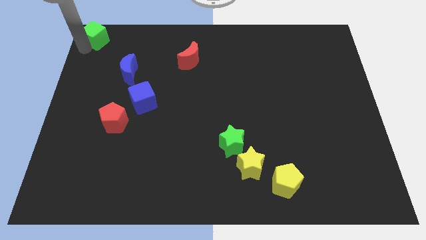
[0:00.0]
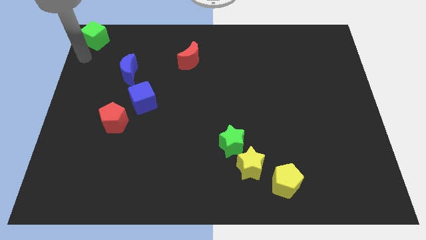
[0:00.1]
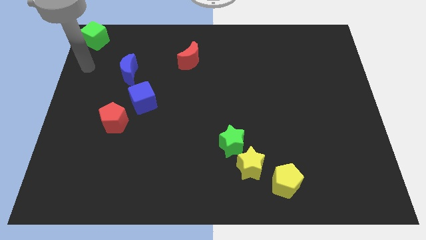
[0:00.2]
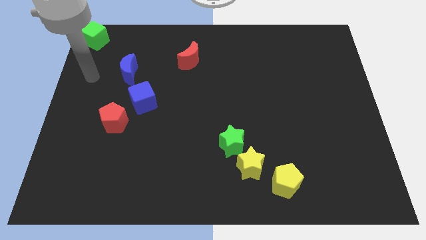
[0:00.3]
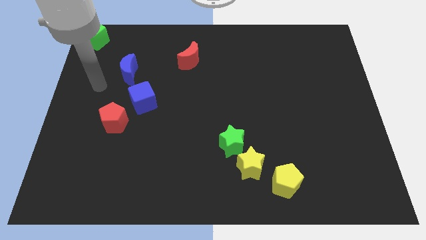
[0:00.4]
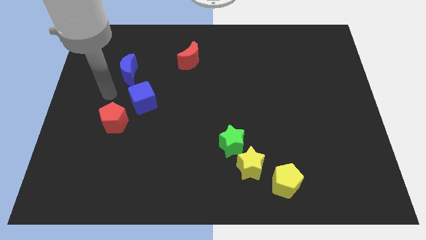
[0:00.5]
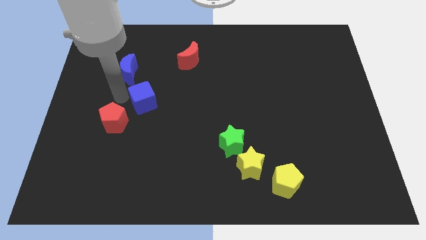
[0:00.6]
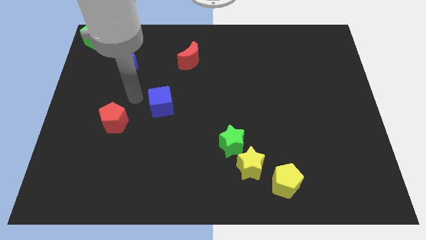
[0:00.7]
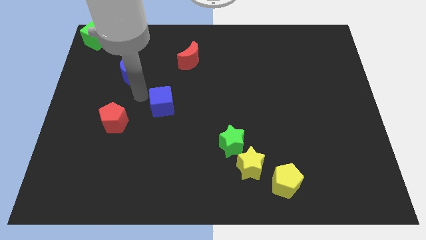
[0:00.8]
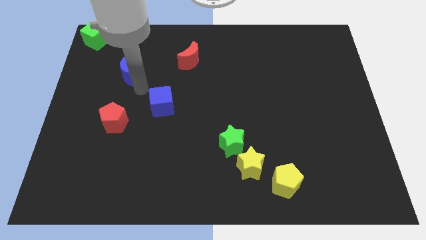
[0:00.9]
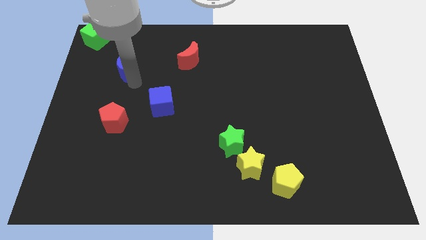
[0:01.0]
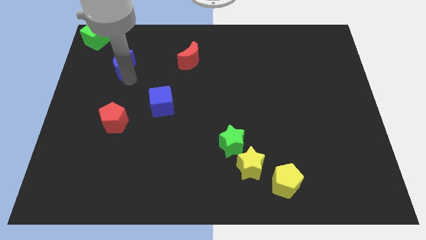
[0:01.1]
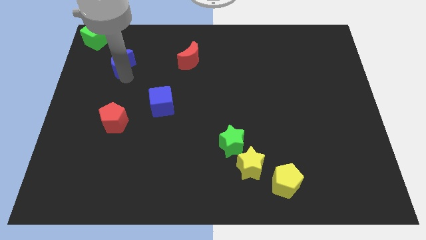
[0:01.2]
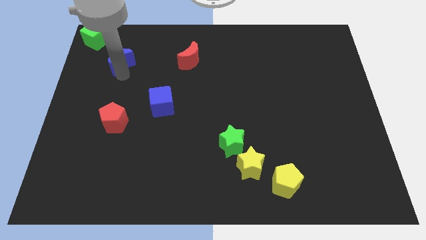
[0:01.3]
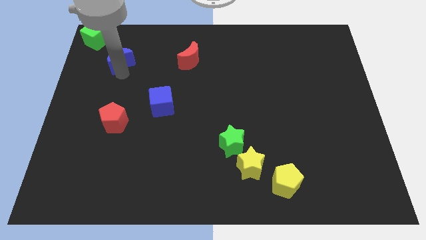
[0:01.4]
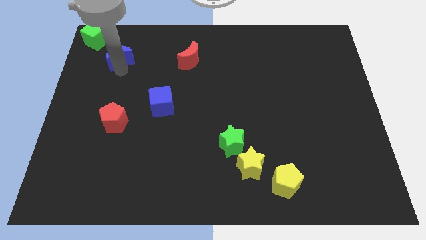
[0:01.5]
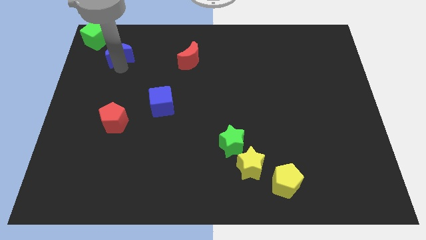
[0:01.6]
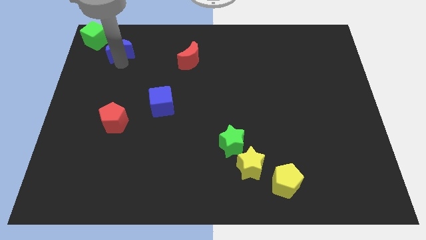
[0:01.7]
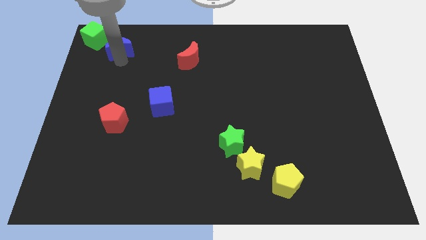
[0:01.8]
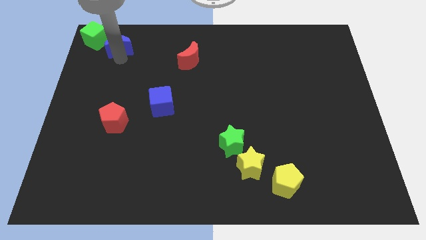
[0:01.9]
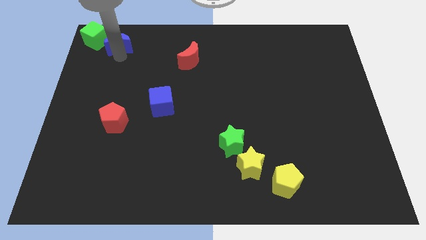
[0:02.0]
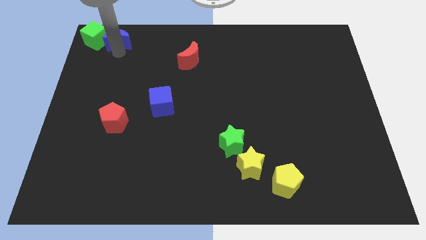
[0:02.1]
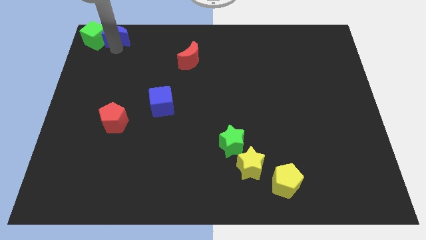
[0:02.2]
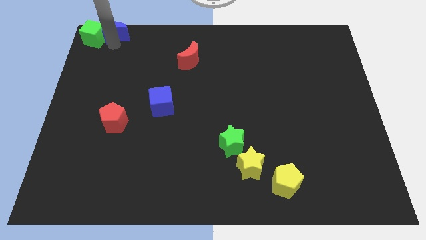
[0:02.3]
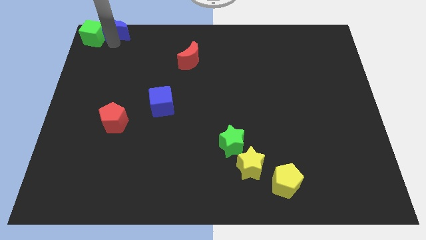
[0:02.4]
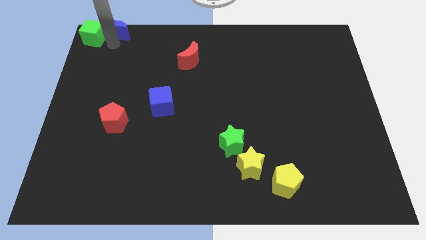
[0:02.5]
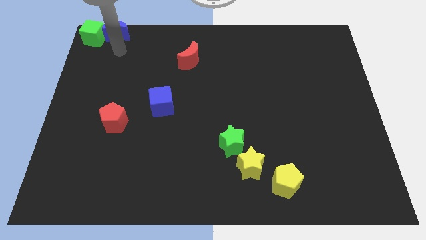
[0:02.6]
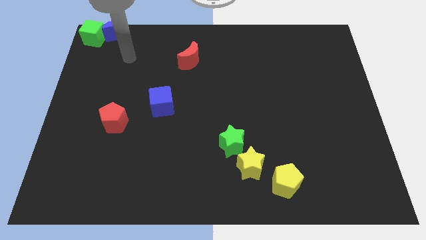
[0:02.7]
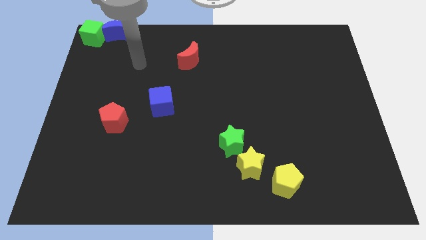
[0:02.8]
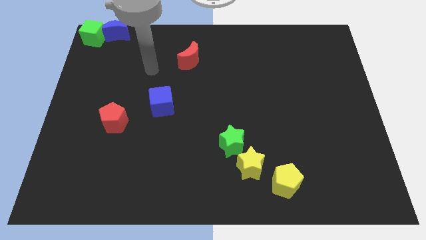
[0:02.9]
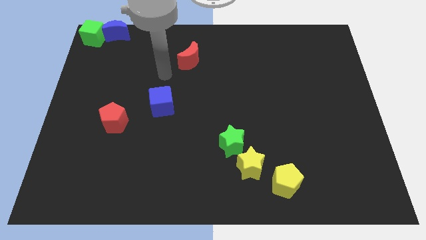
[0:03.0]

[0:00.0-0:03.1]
place the blue crescent at the right side of the green cube

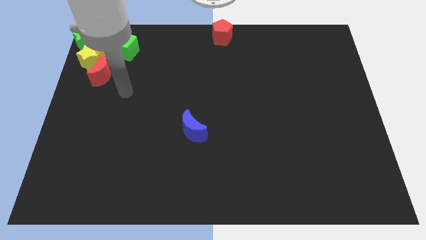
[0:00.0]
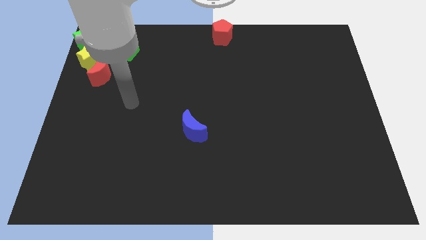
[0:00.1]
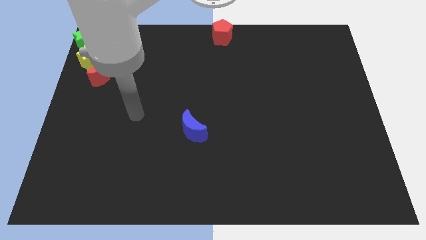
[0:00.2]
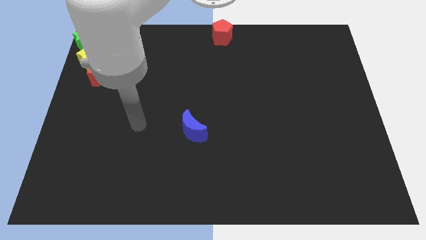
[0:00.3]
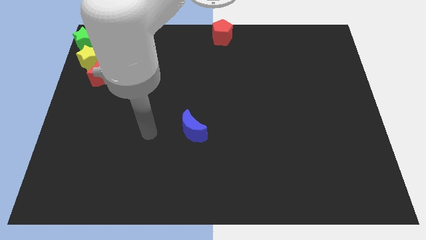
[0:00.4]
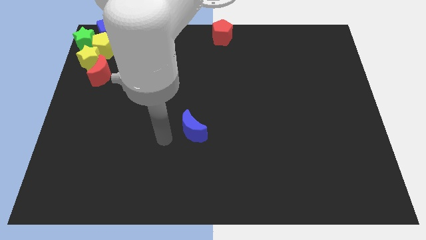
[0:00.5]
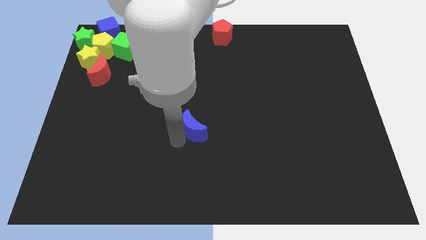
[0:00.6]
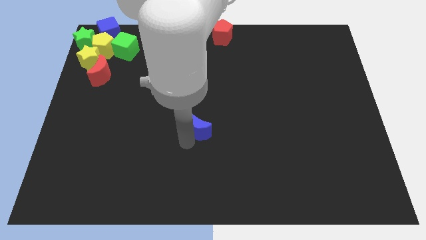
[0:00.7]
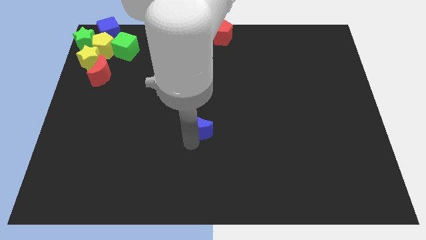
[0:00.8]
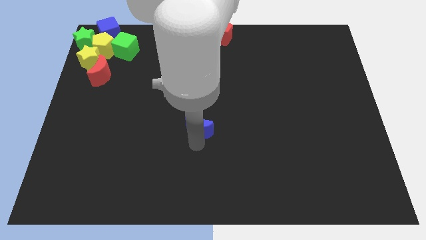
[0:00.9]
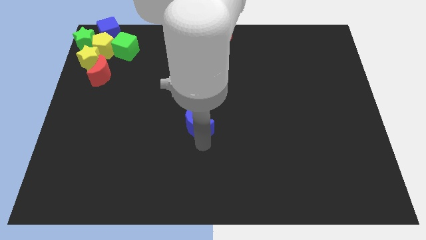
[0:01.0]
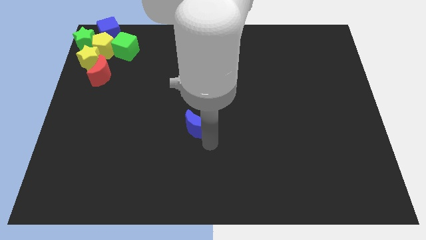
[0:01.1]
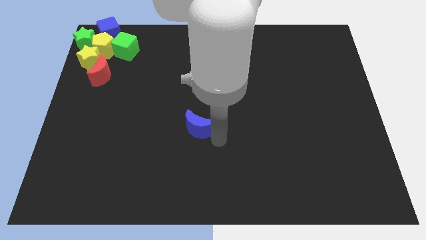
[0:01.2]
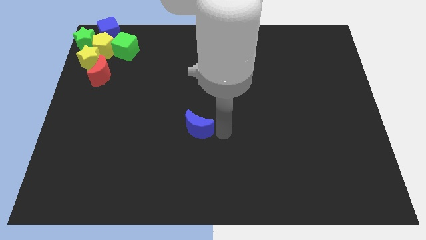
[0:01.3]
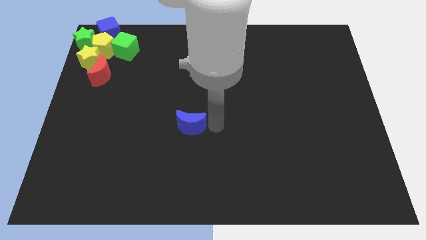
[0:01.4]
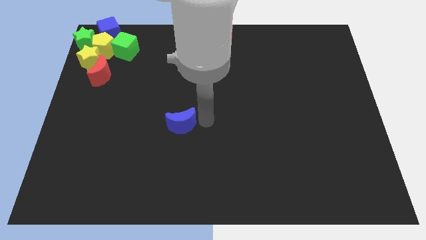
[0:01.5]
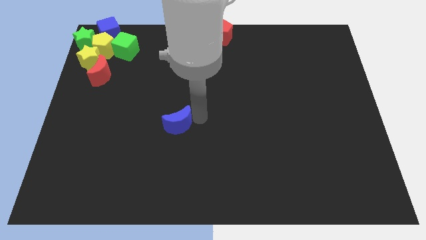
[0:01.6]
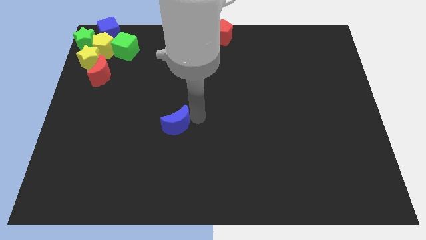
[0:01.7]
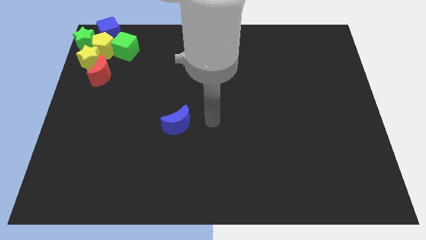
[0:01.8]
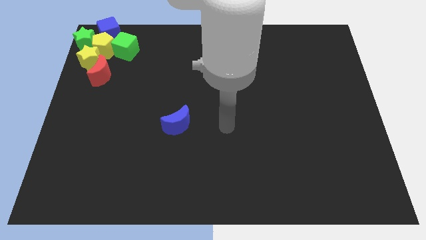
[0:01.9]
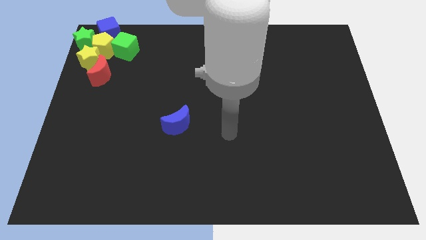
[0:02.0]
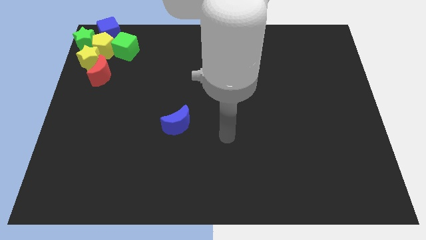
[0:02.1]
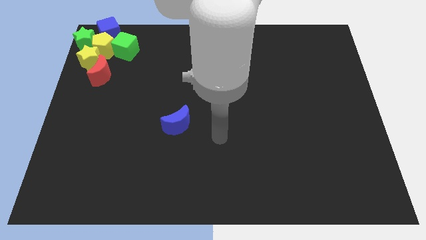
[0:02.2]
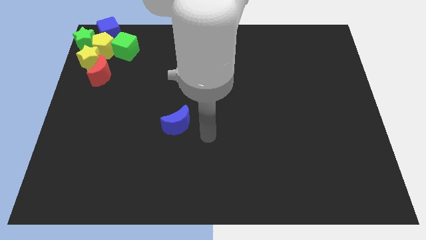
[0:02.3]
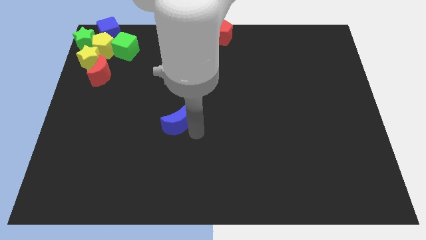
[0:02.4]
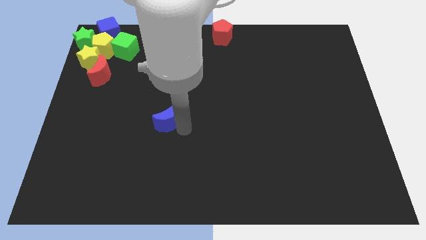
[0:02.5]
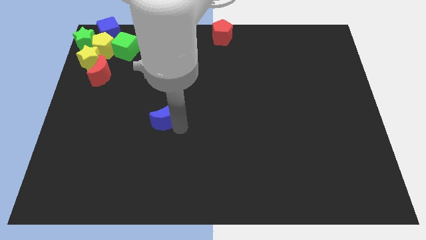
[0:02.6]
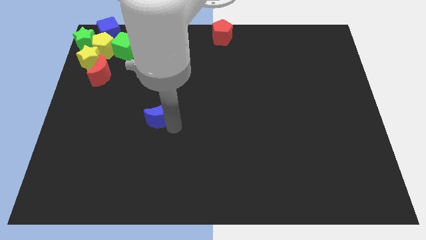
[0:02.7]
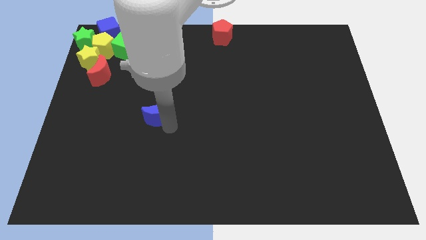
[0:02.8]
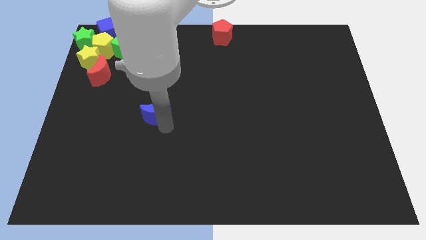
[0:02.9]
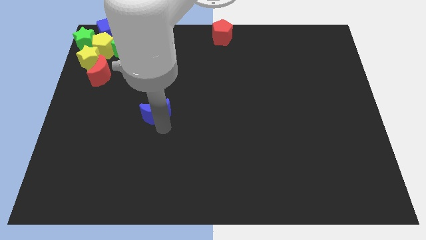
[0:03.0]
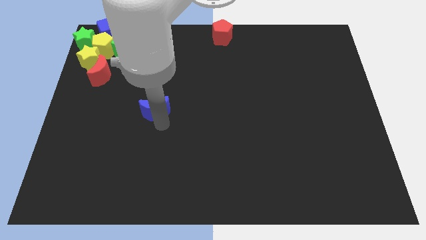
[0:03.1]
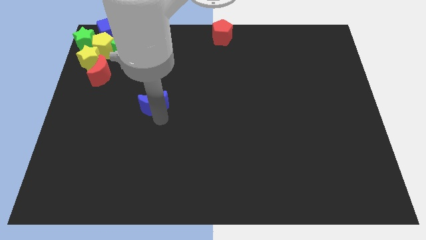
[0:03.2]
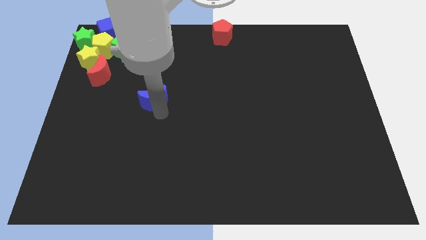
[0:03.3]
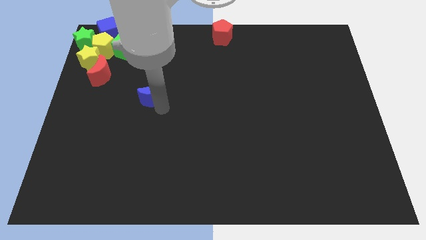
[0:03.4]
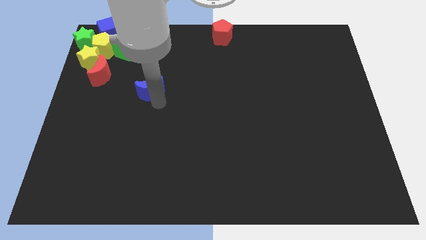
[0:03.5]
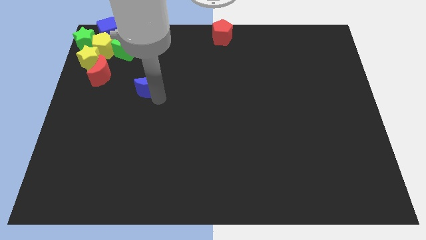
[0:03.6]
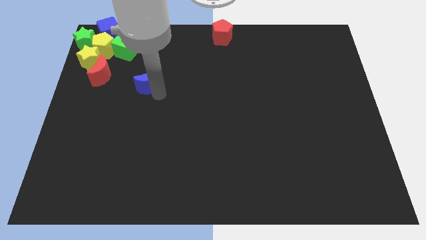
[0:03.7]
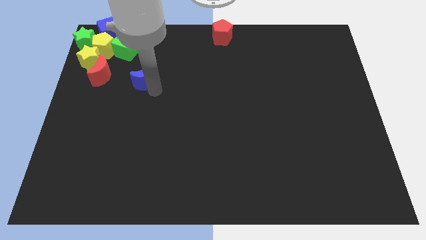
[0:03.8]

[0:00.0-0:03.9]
place blue moon diagonal to the right of the red crescent

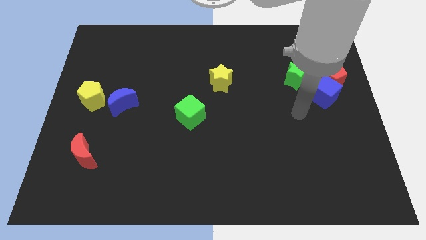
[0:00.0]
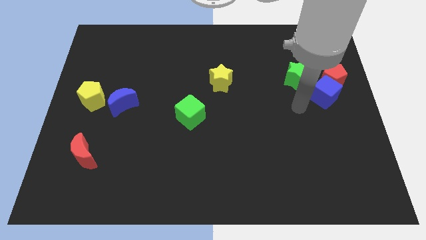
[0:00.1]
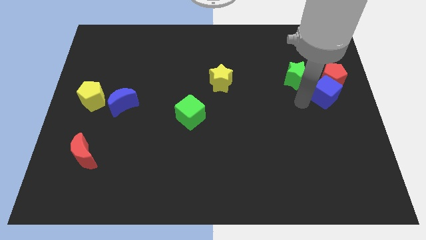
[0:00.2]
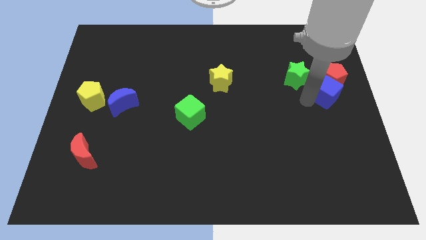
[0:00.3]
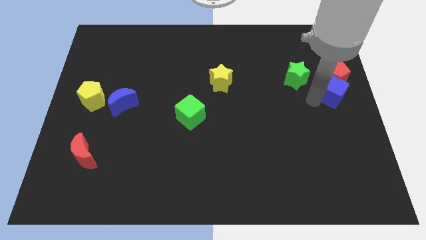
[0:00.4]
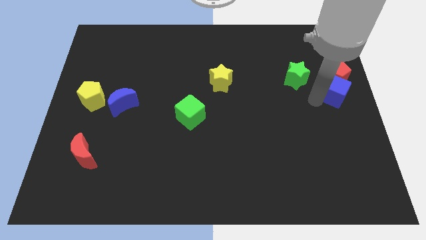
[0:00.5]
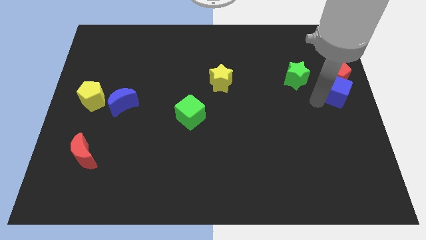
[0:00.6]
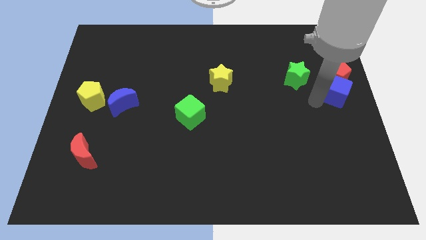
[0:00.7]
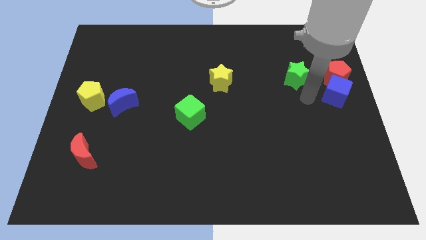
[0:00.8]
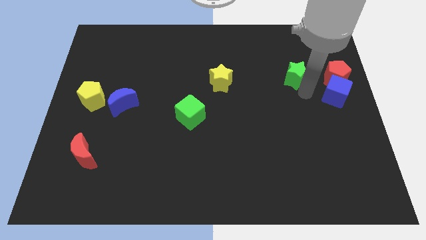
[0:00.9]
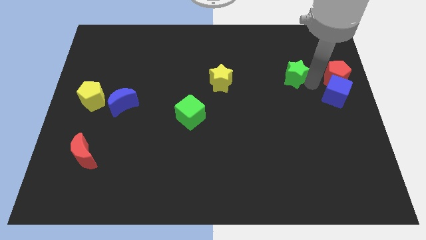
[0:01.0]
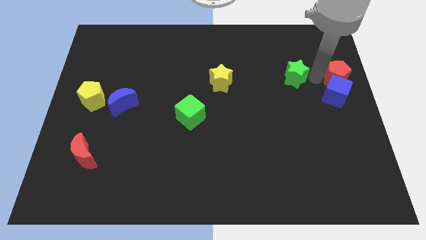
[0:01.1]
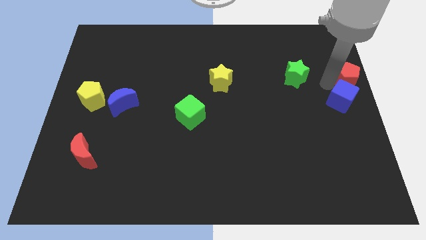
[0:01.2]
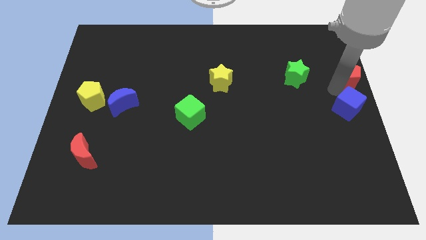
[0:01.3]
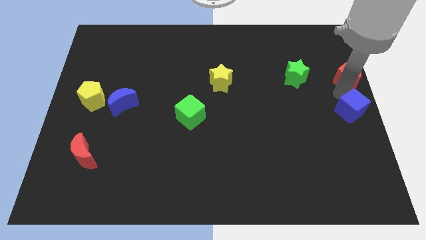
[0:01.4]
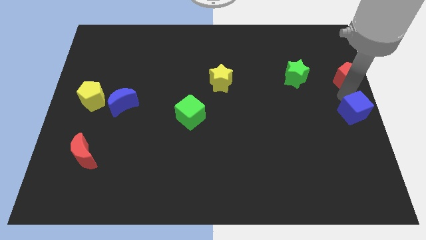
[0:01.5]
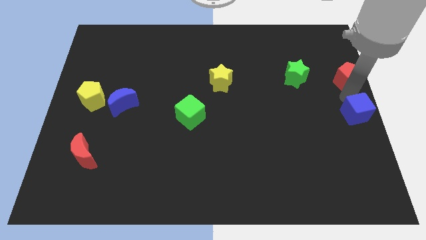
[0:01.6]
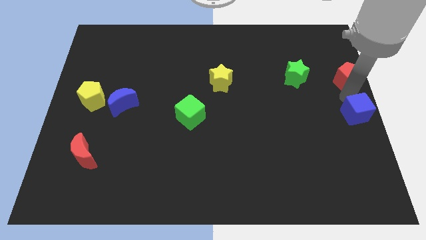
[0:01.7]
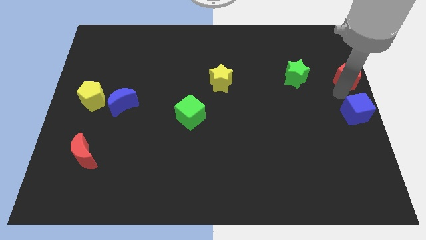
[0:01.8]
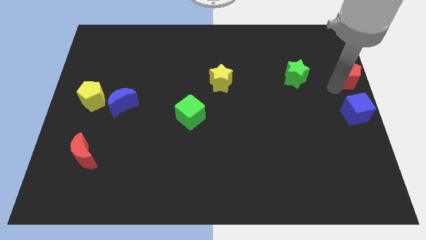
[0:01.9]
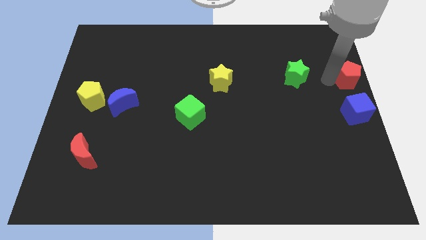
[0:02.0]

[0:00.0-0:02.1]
separate the blue cube and red pentagon
